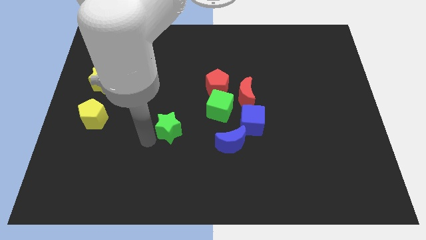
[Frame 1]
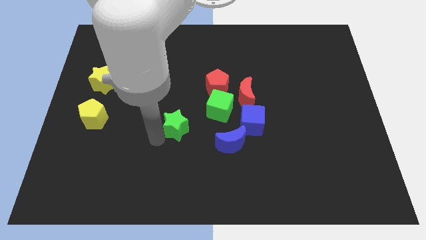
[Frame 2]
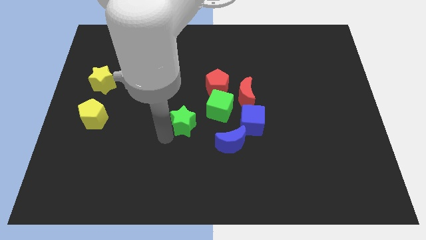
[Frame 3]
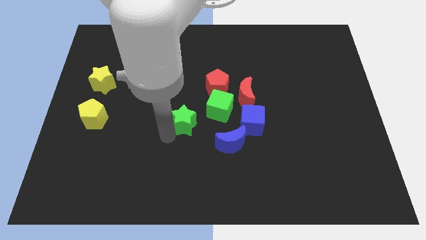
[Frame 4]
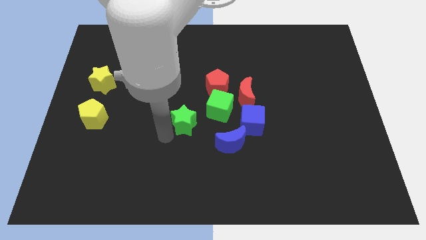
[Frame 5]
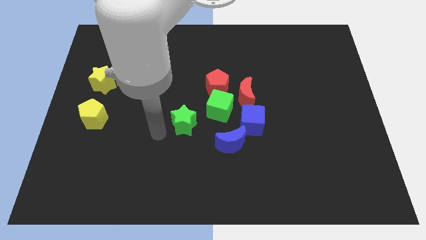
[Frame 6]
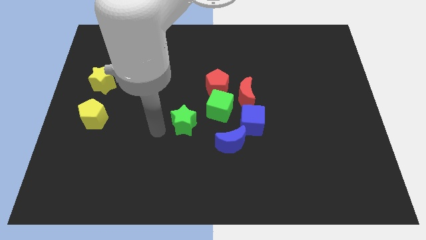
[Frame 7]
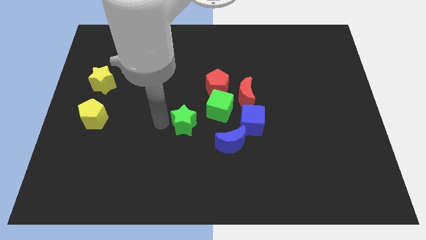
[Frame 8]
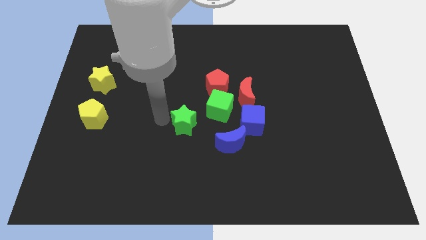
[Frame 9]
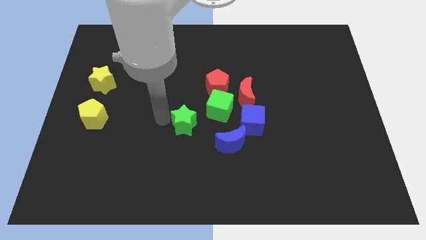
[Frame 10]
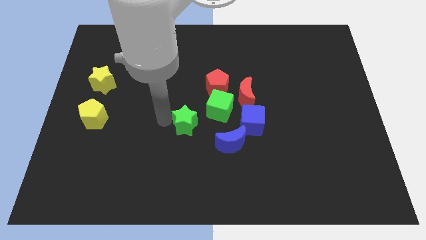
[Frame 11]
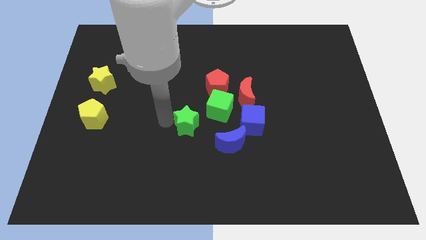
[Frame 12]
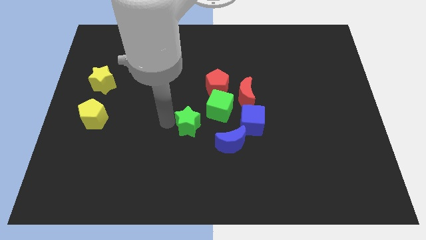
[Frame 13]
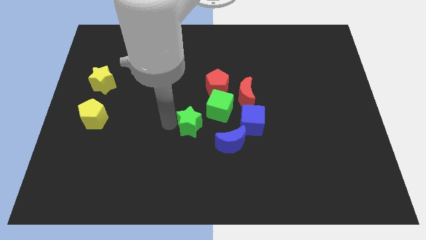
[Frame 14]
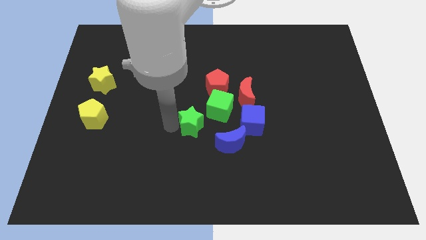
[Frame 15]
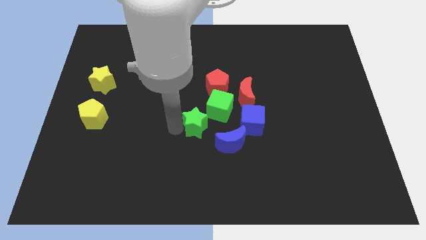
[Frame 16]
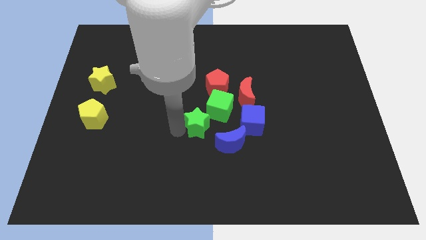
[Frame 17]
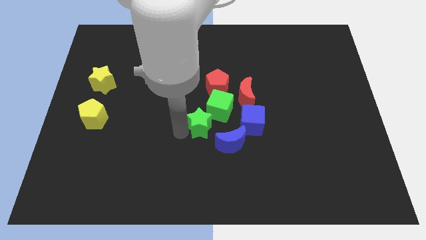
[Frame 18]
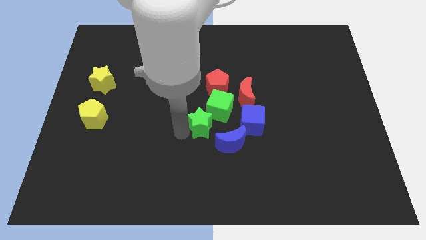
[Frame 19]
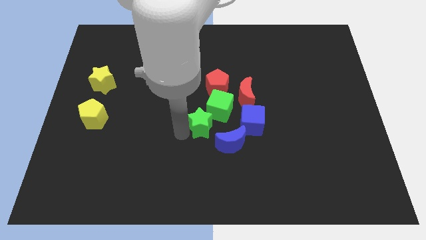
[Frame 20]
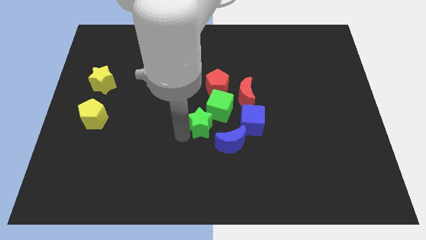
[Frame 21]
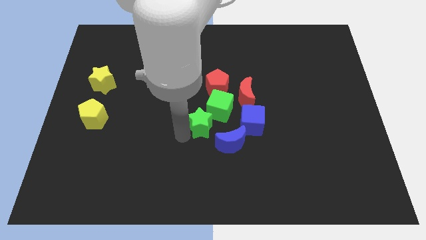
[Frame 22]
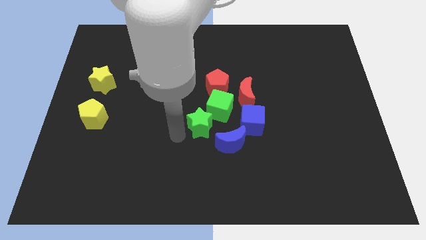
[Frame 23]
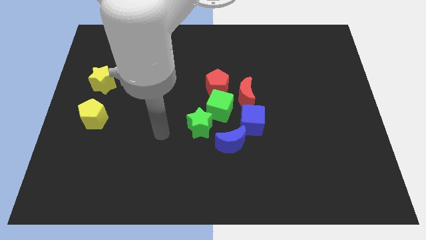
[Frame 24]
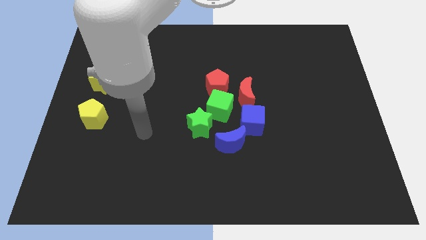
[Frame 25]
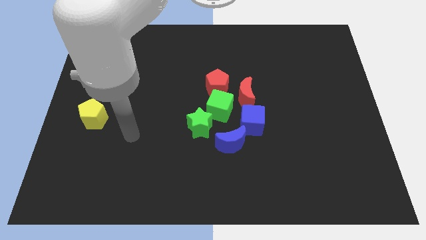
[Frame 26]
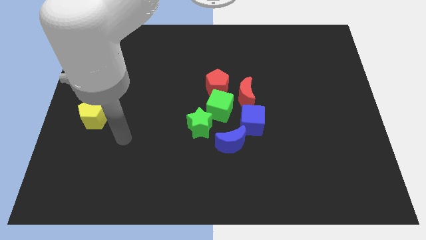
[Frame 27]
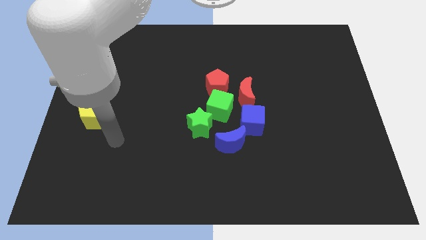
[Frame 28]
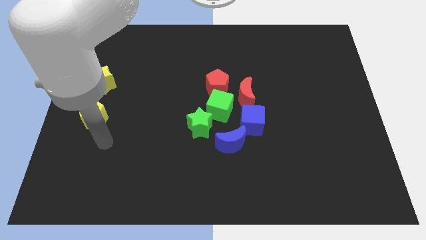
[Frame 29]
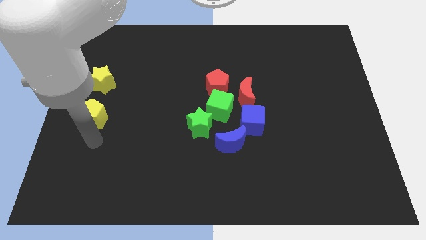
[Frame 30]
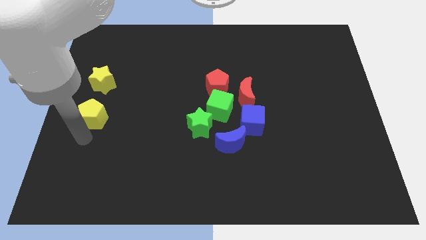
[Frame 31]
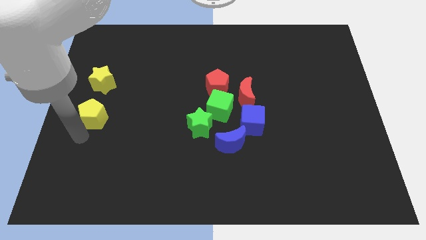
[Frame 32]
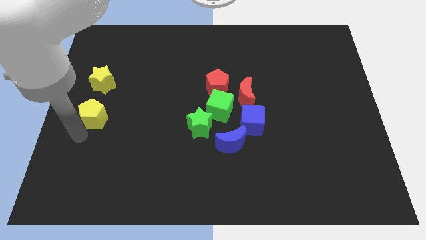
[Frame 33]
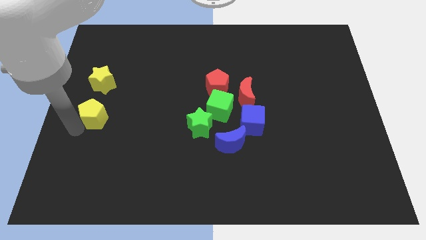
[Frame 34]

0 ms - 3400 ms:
slightly move the green star to the bottom left of the green cube

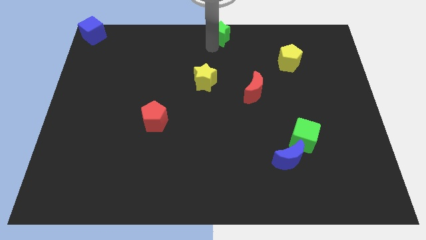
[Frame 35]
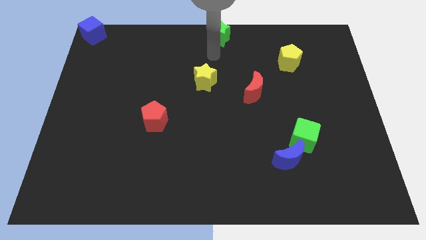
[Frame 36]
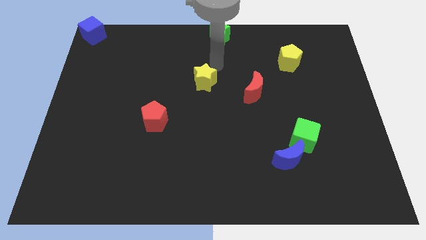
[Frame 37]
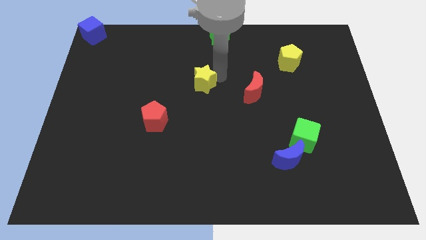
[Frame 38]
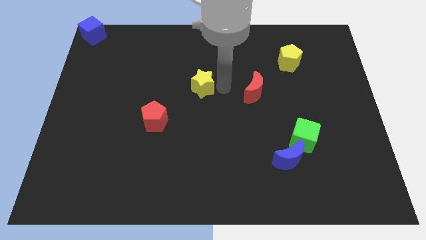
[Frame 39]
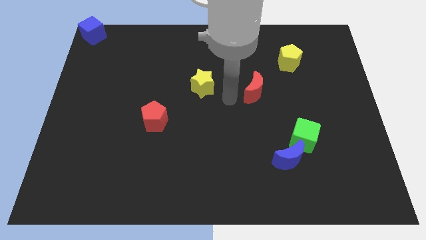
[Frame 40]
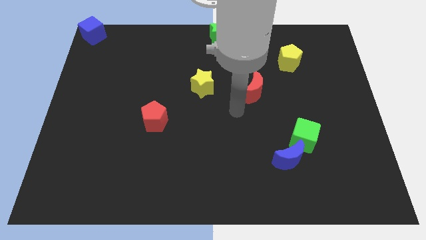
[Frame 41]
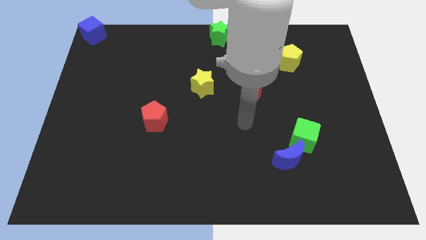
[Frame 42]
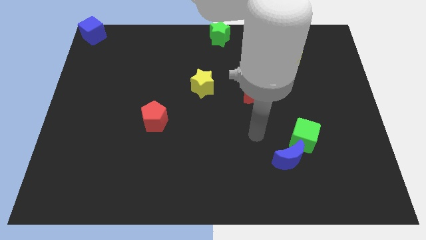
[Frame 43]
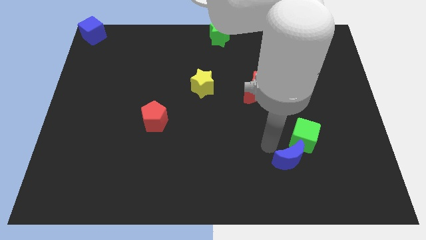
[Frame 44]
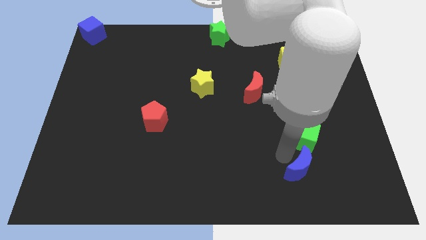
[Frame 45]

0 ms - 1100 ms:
move arm towards blue crescent

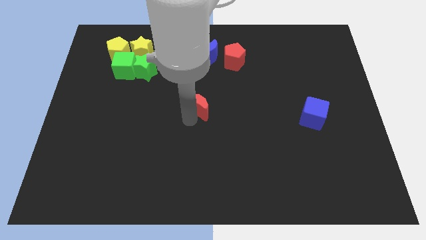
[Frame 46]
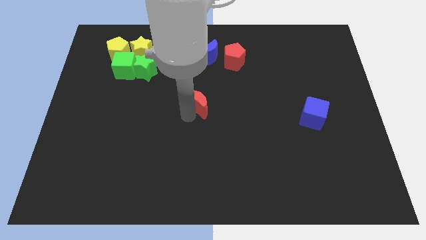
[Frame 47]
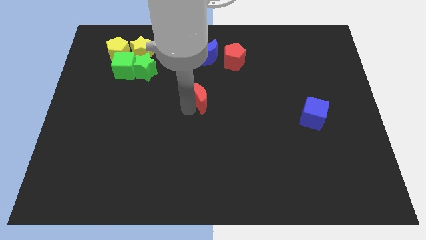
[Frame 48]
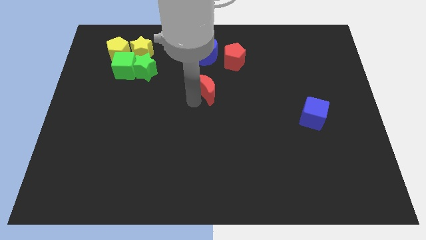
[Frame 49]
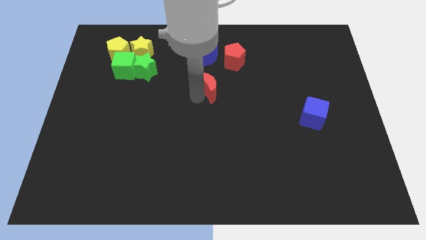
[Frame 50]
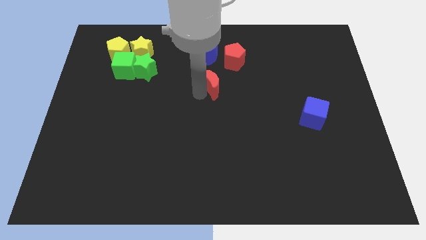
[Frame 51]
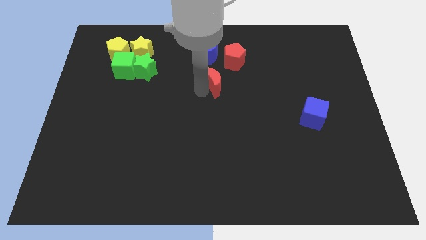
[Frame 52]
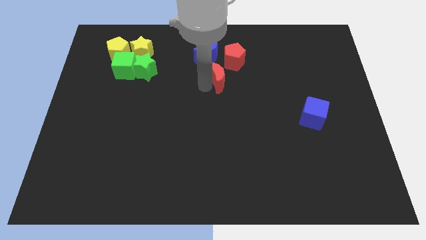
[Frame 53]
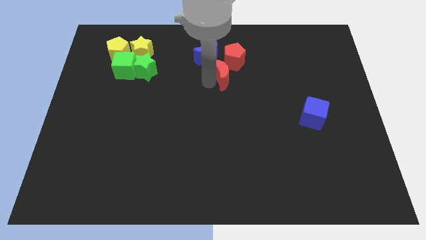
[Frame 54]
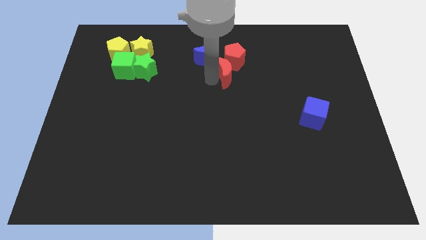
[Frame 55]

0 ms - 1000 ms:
drag the red moon slightly upwards

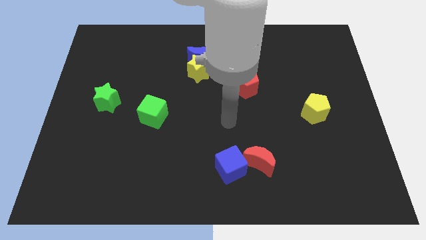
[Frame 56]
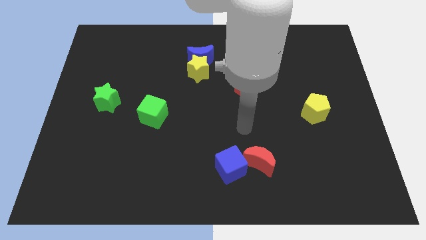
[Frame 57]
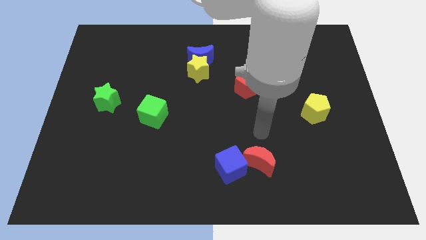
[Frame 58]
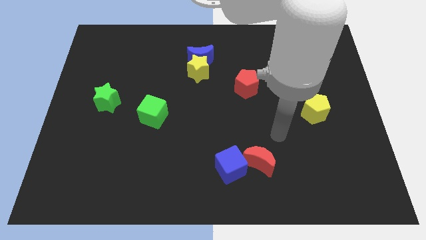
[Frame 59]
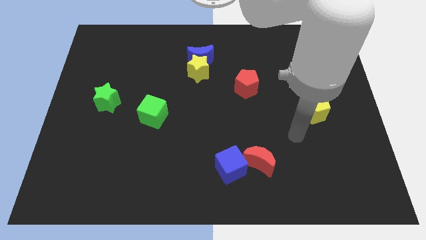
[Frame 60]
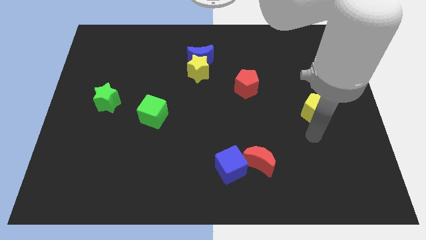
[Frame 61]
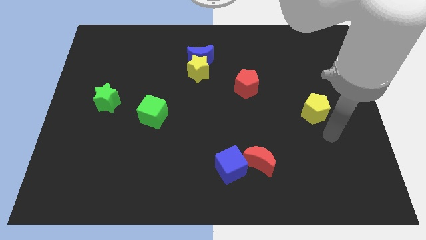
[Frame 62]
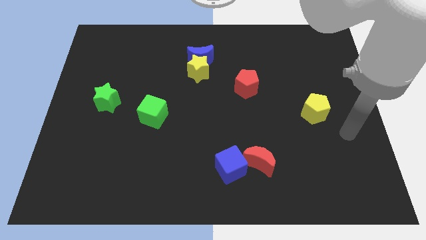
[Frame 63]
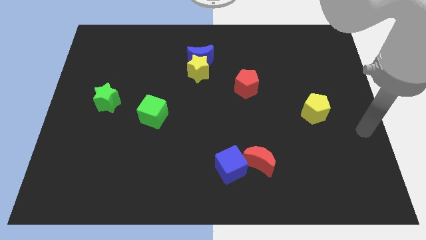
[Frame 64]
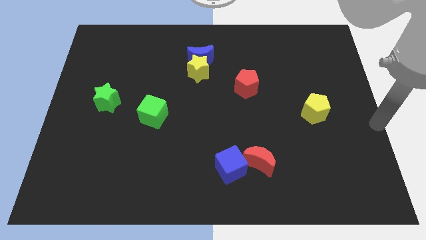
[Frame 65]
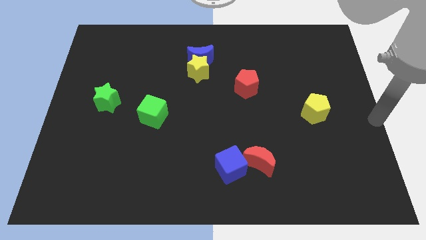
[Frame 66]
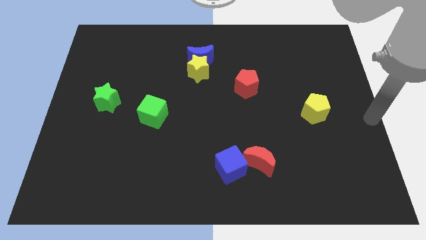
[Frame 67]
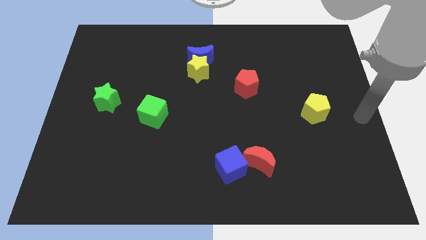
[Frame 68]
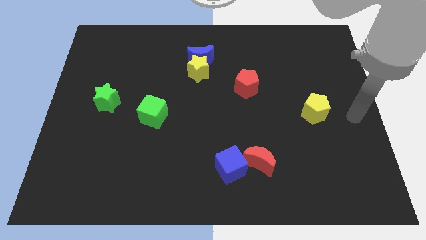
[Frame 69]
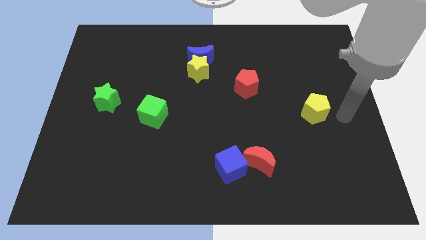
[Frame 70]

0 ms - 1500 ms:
place your arm to the rightt of yellow pentagon

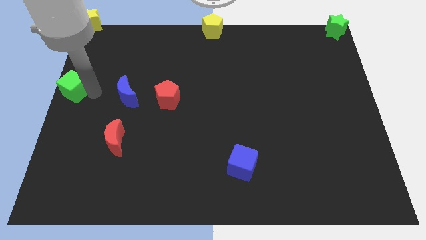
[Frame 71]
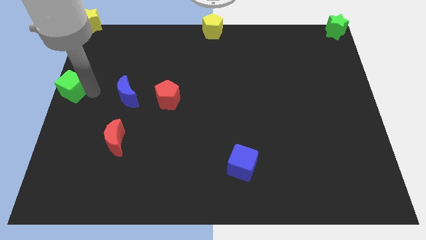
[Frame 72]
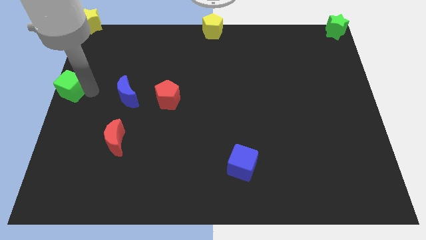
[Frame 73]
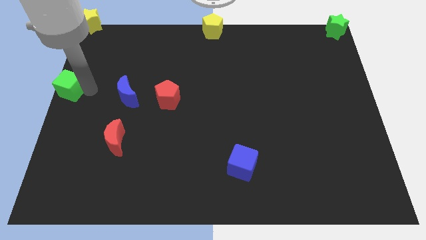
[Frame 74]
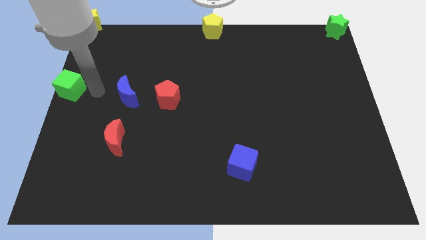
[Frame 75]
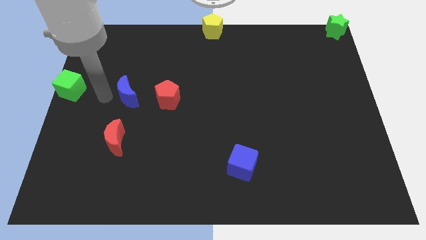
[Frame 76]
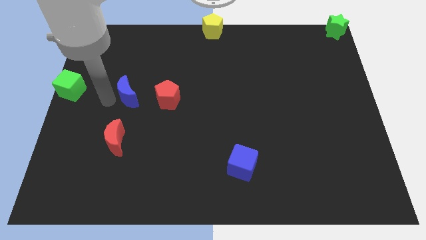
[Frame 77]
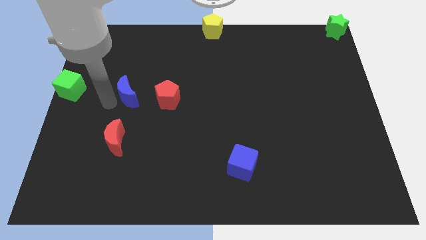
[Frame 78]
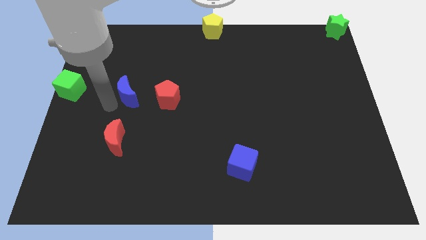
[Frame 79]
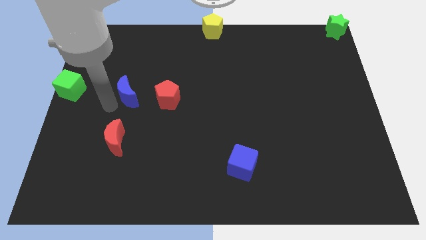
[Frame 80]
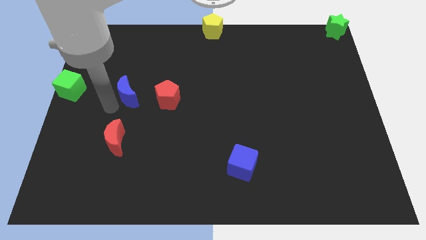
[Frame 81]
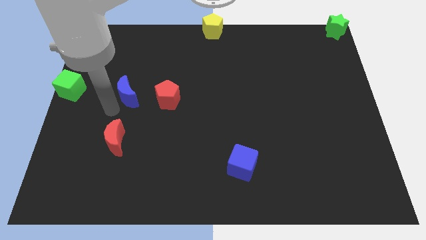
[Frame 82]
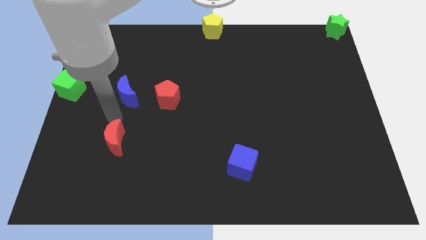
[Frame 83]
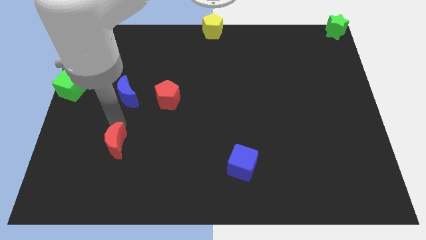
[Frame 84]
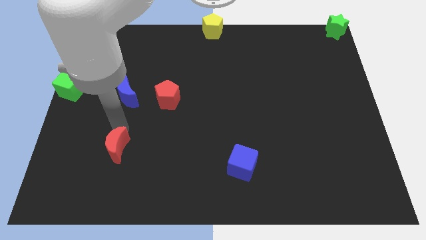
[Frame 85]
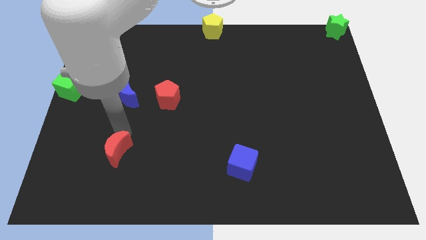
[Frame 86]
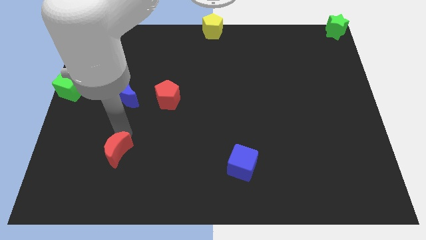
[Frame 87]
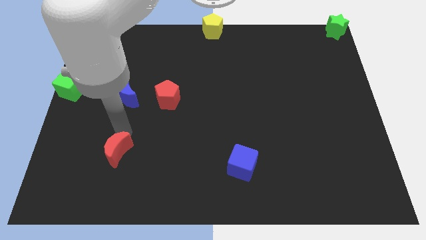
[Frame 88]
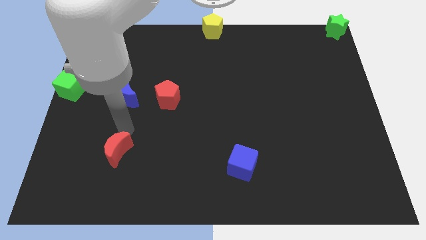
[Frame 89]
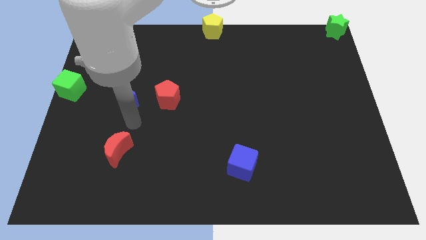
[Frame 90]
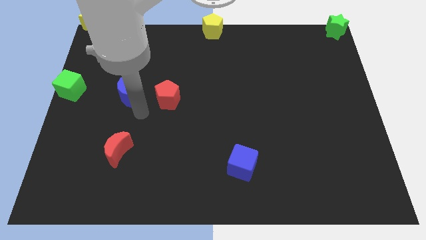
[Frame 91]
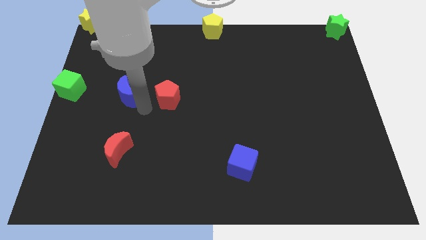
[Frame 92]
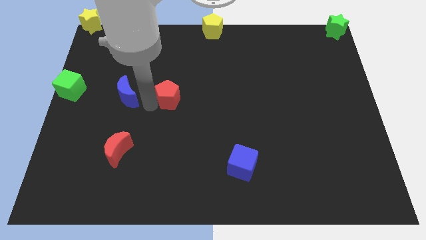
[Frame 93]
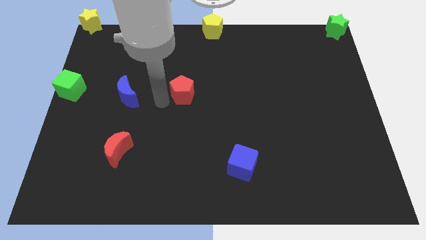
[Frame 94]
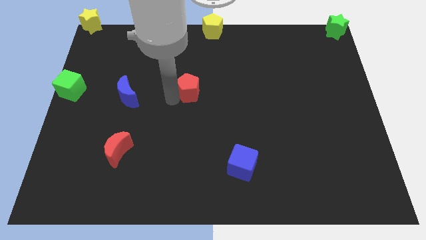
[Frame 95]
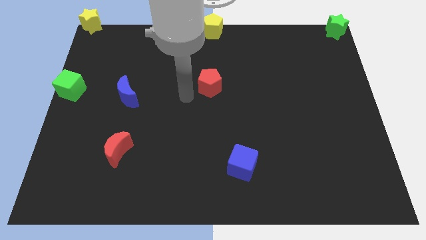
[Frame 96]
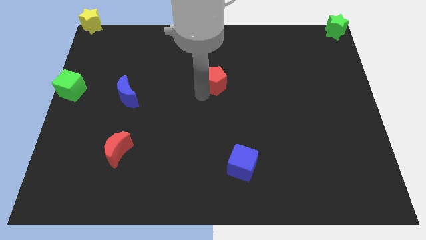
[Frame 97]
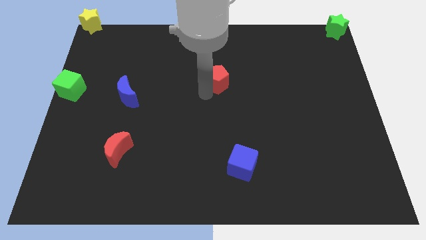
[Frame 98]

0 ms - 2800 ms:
place the red rectangle down to the yellow pentagon
